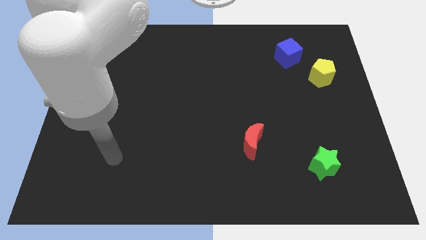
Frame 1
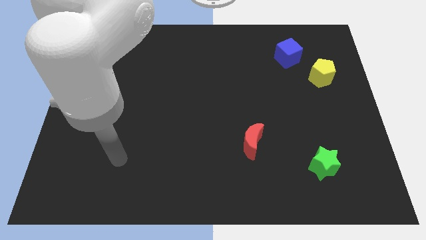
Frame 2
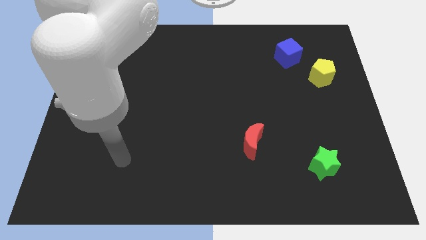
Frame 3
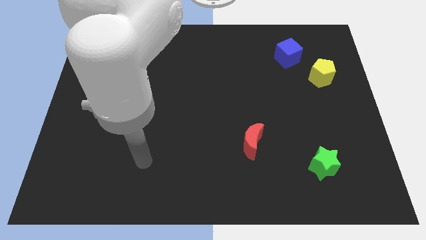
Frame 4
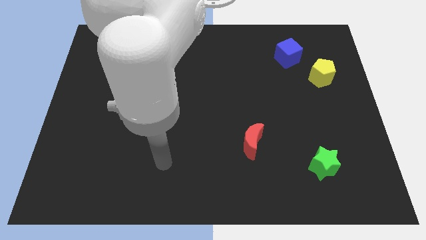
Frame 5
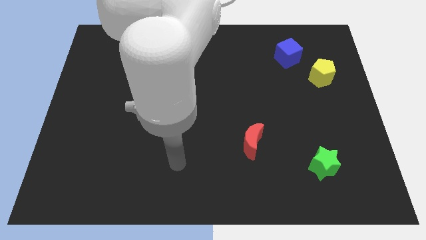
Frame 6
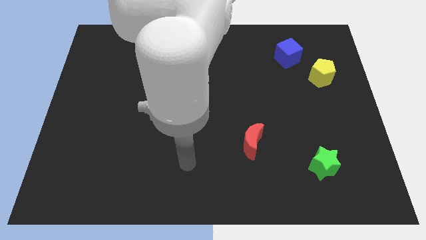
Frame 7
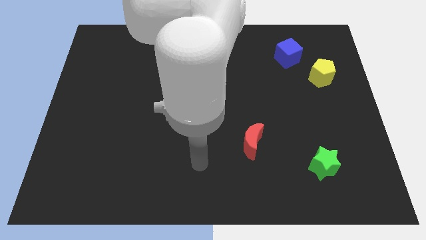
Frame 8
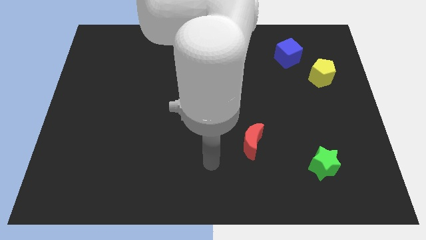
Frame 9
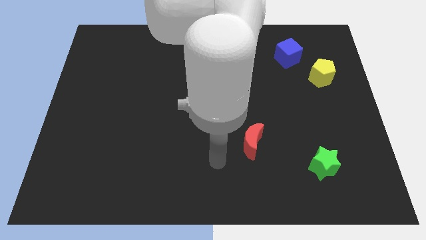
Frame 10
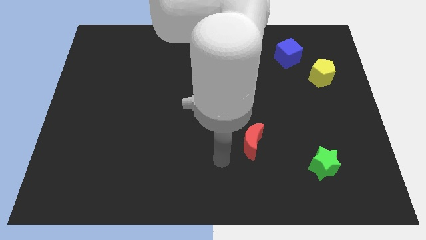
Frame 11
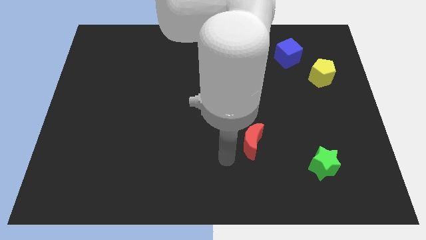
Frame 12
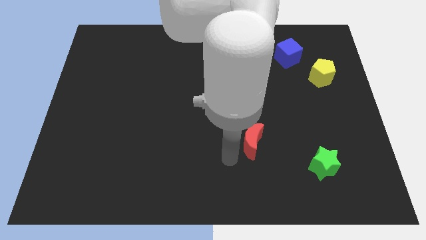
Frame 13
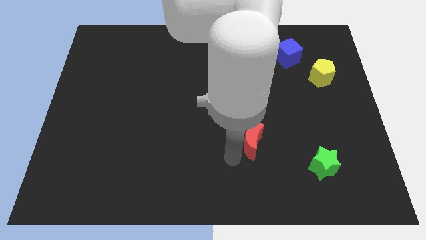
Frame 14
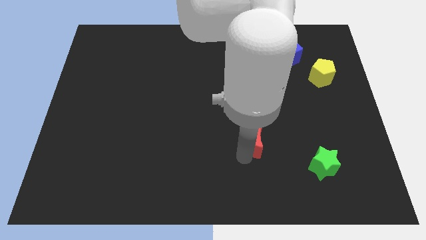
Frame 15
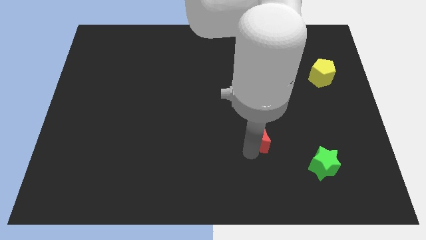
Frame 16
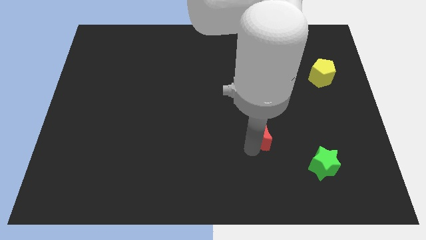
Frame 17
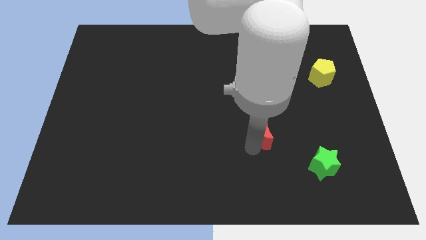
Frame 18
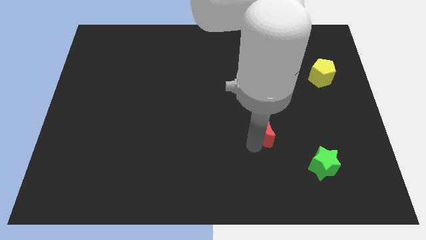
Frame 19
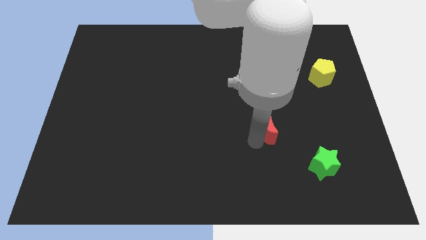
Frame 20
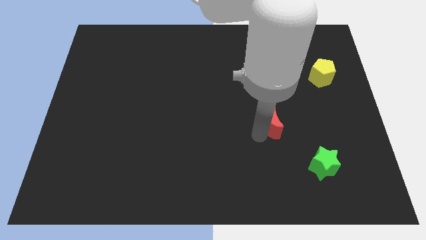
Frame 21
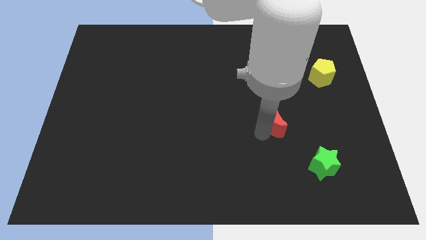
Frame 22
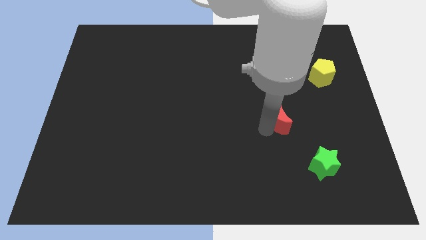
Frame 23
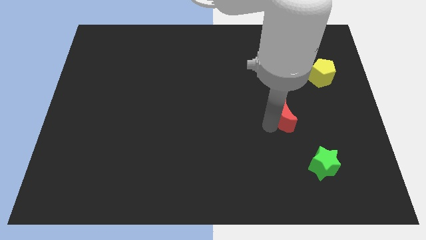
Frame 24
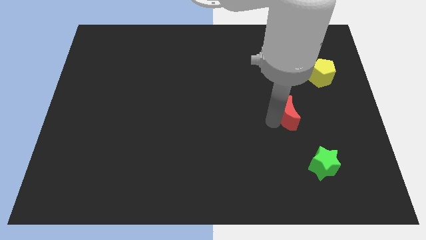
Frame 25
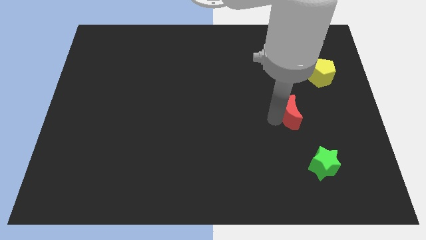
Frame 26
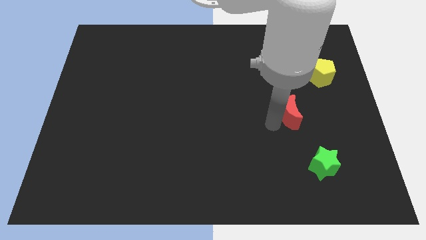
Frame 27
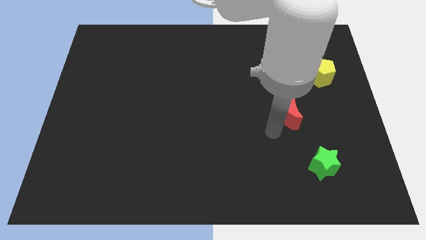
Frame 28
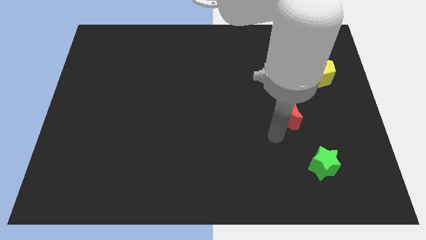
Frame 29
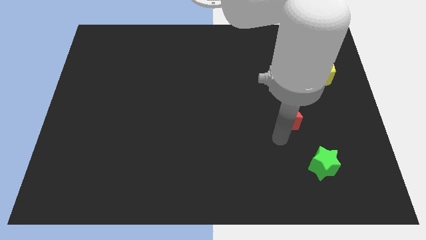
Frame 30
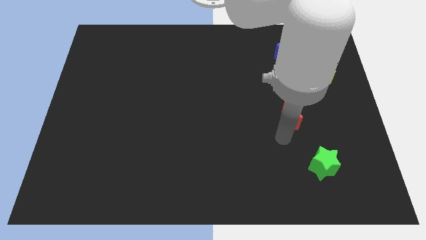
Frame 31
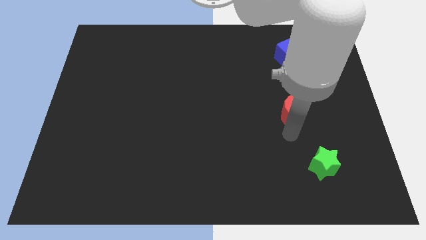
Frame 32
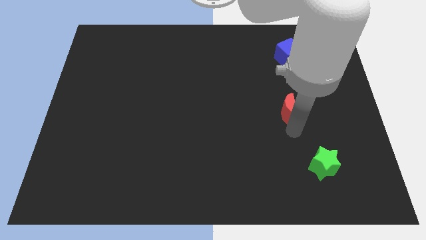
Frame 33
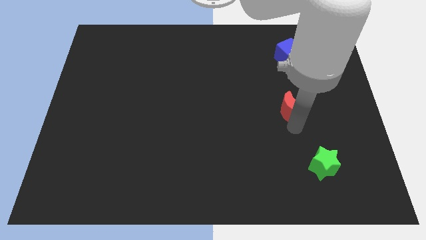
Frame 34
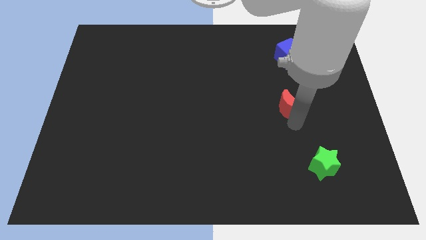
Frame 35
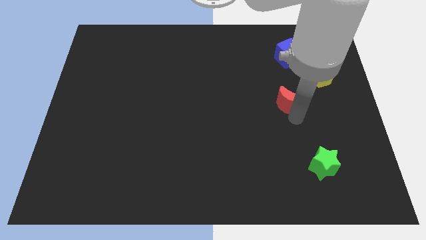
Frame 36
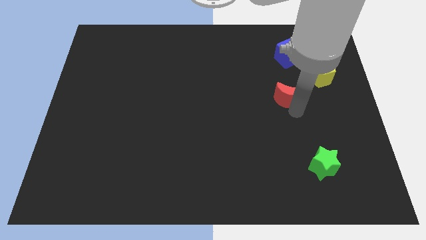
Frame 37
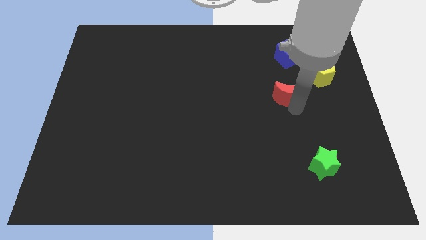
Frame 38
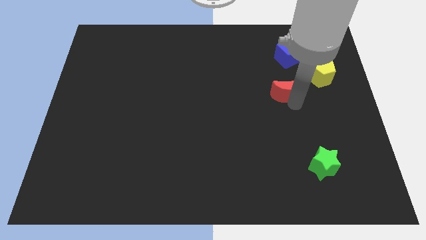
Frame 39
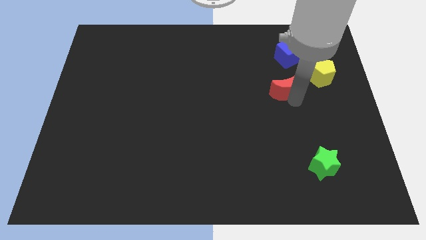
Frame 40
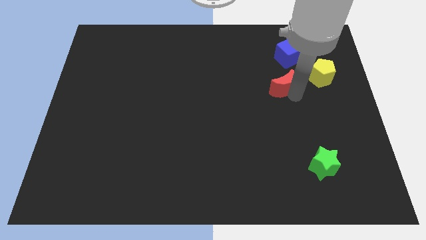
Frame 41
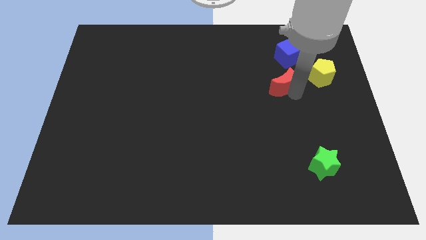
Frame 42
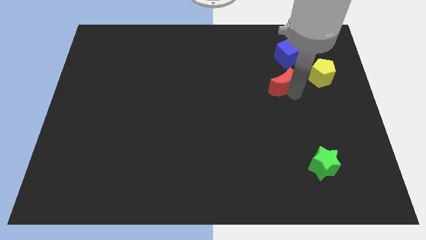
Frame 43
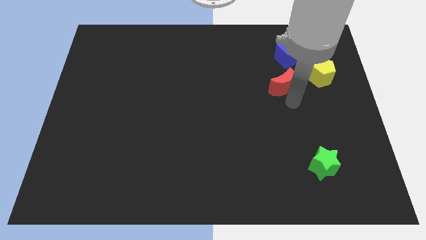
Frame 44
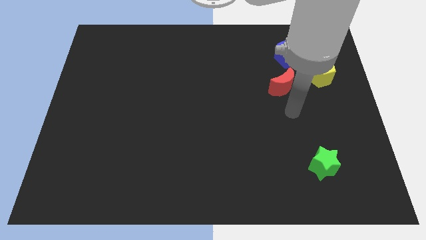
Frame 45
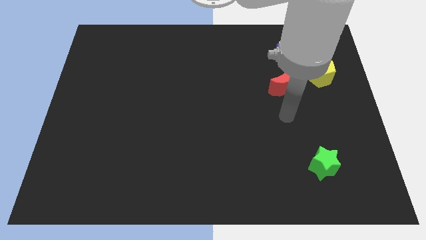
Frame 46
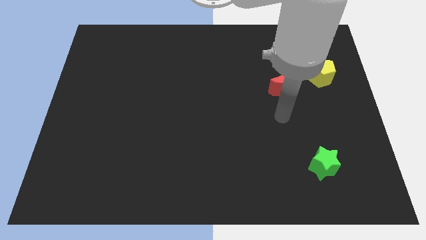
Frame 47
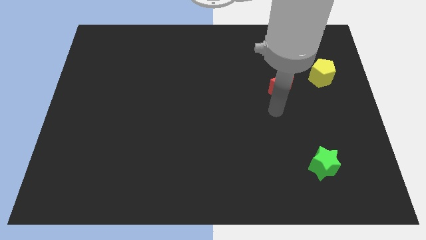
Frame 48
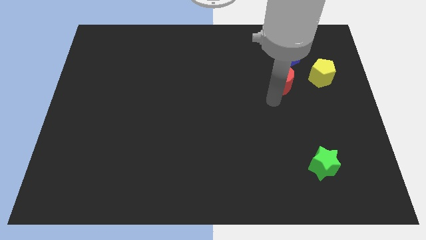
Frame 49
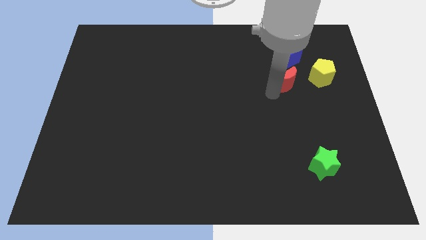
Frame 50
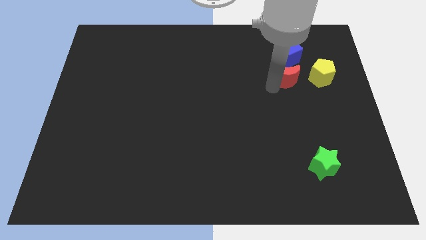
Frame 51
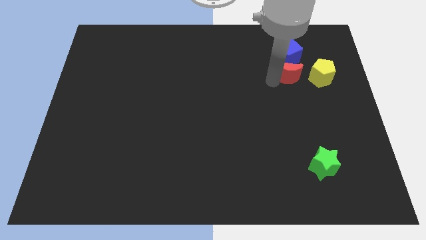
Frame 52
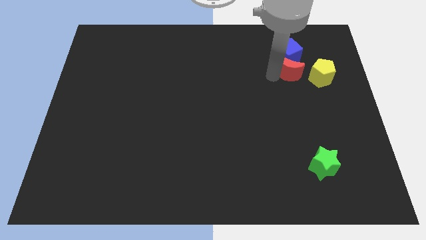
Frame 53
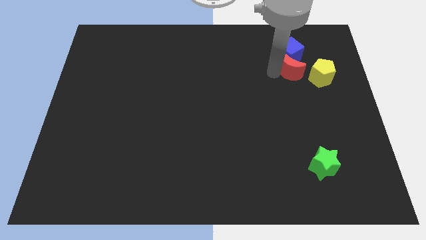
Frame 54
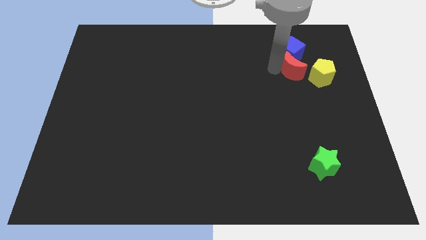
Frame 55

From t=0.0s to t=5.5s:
push the red moon towards the blue cube

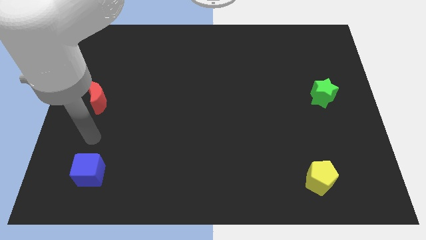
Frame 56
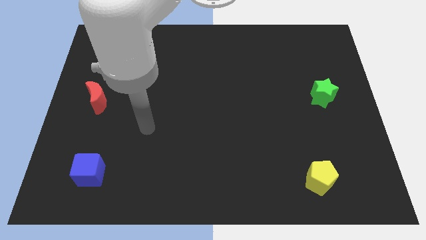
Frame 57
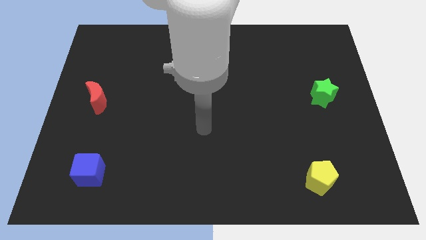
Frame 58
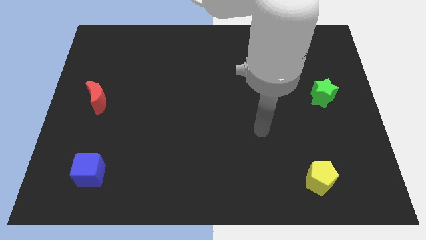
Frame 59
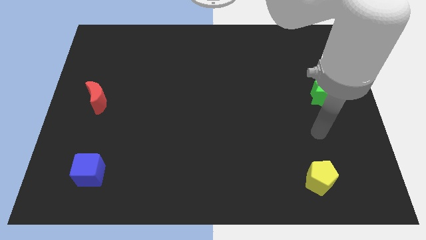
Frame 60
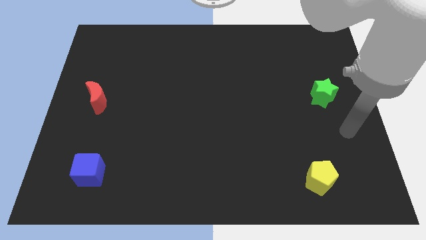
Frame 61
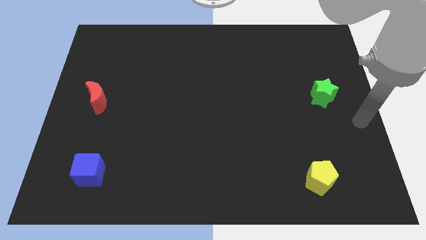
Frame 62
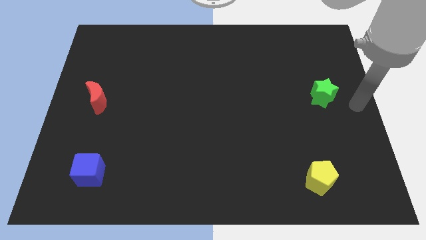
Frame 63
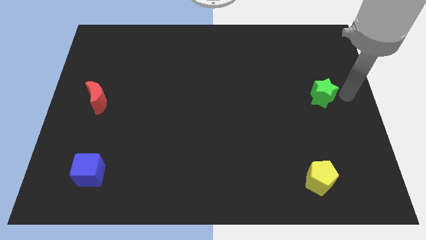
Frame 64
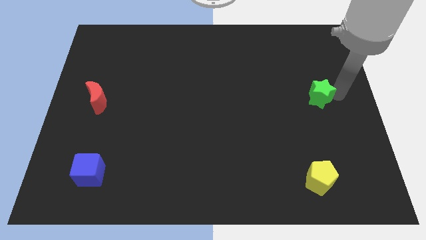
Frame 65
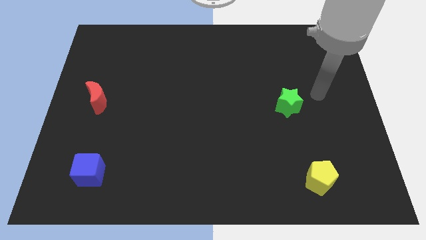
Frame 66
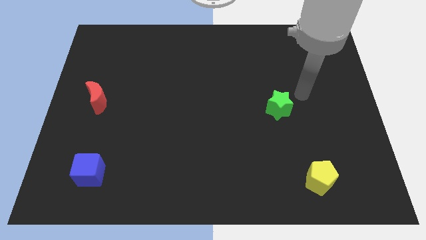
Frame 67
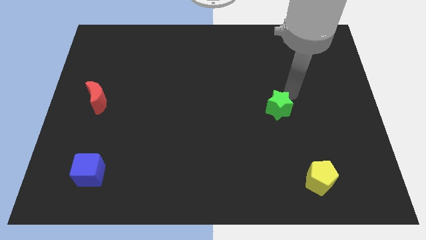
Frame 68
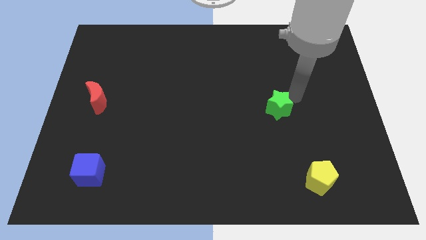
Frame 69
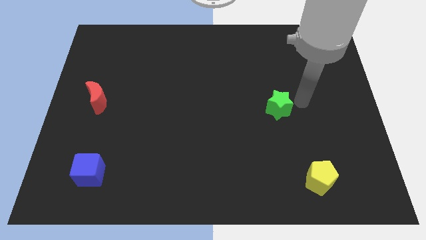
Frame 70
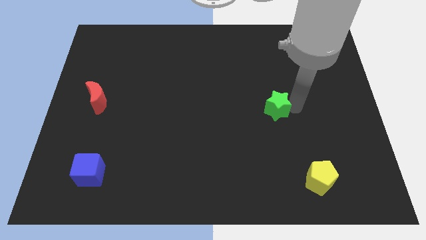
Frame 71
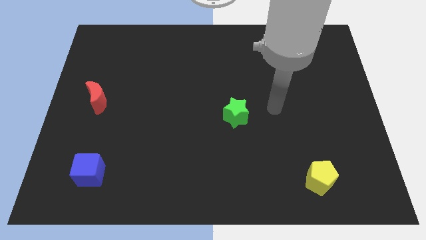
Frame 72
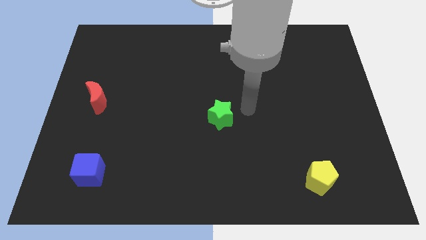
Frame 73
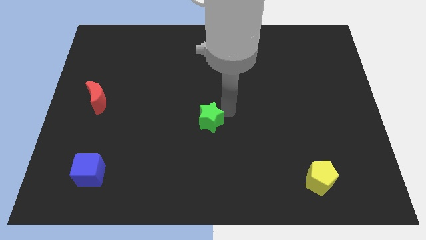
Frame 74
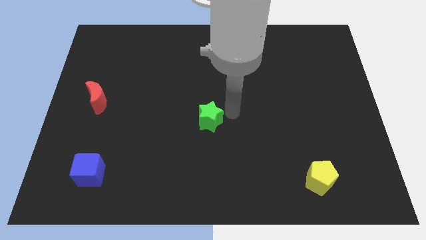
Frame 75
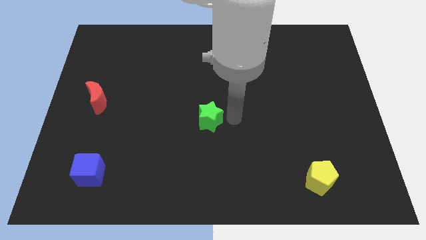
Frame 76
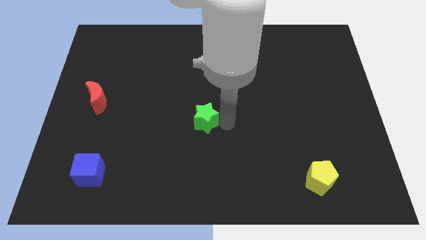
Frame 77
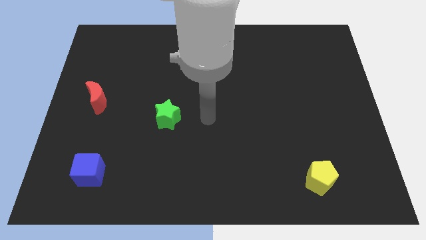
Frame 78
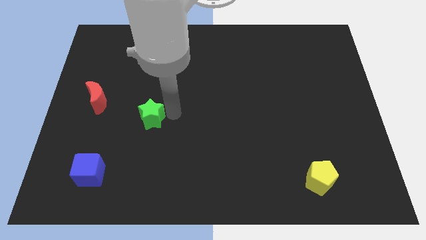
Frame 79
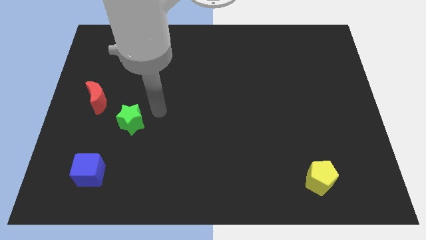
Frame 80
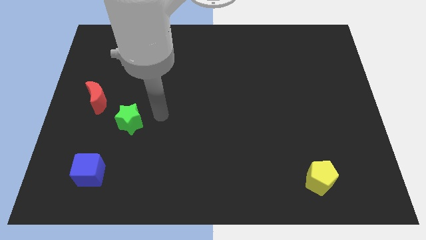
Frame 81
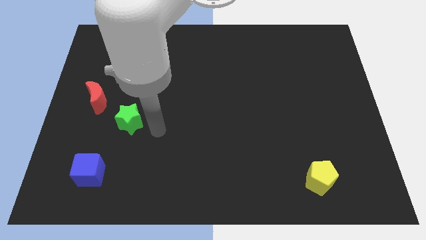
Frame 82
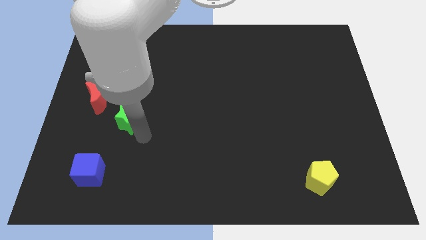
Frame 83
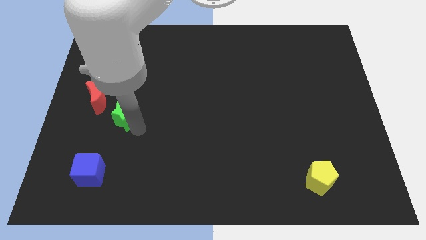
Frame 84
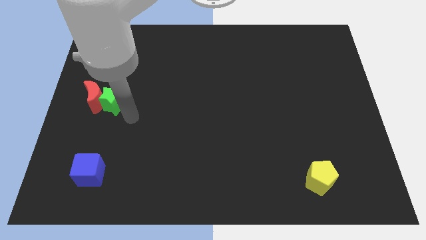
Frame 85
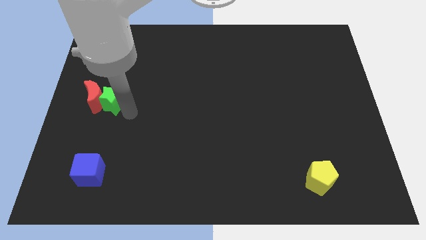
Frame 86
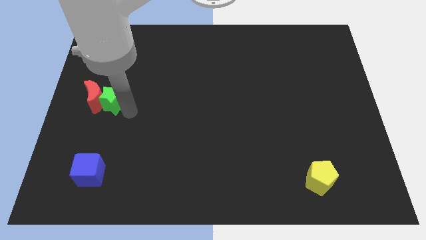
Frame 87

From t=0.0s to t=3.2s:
move the star close to the red moon

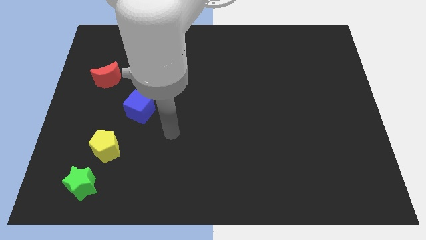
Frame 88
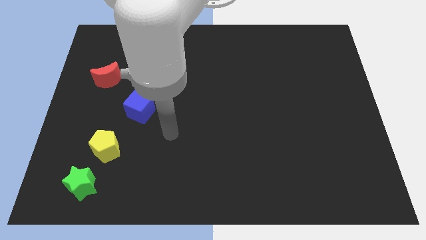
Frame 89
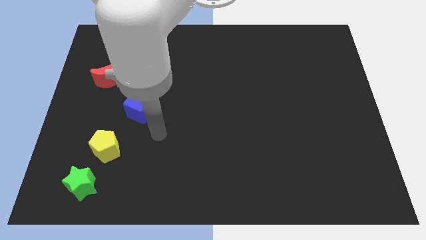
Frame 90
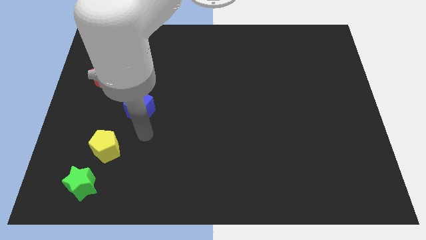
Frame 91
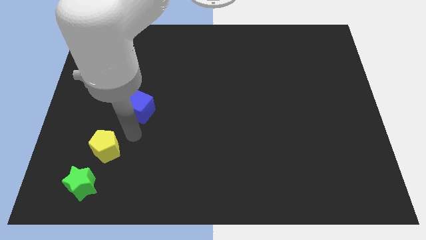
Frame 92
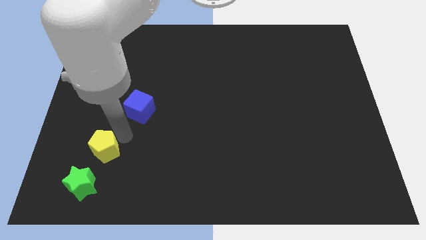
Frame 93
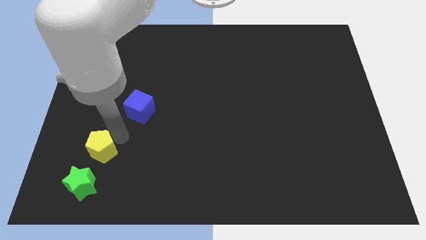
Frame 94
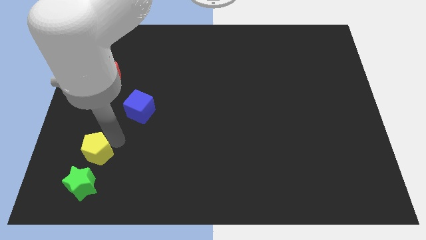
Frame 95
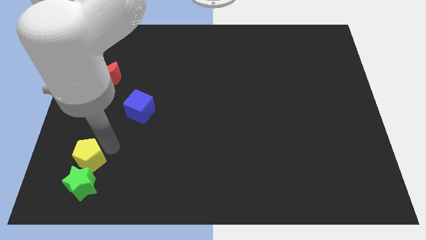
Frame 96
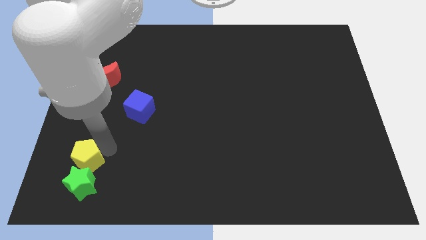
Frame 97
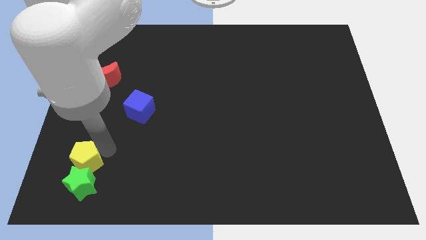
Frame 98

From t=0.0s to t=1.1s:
slide the yellow pentagon to the green star
